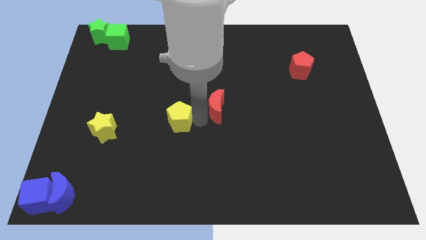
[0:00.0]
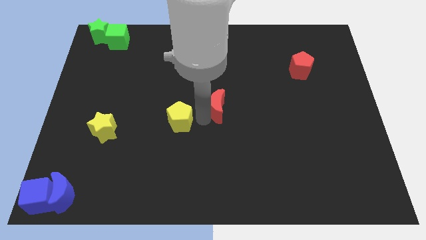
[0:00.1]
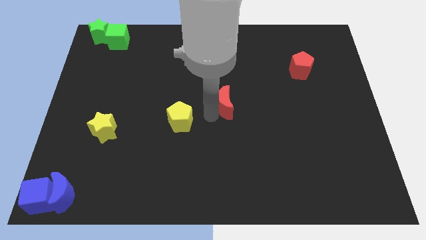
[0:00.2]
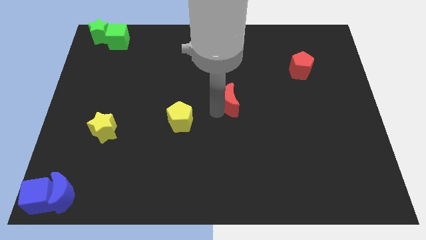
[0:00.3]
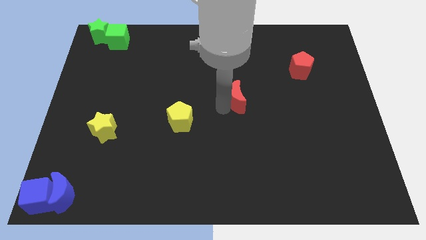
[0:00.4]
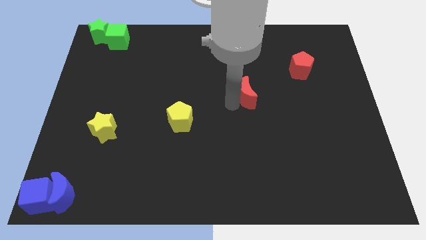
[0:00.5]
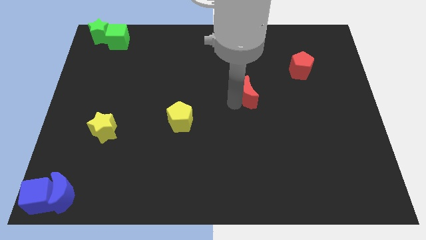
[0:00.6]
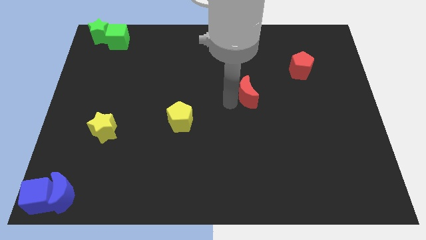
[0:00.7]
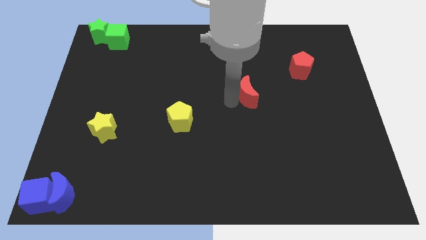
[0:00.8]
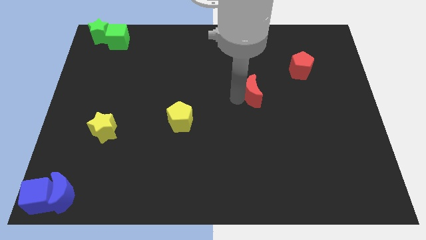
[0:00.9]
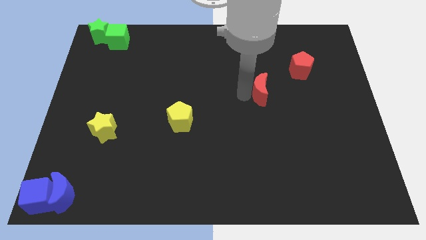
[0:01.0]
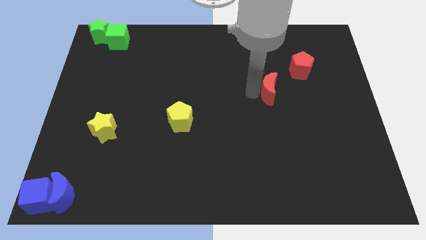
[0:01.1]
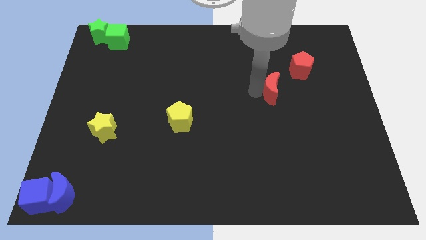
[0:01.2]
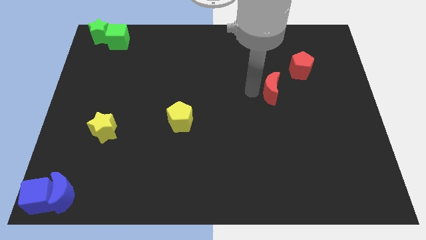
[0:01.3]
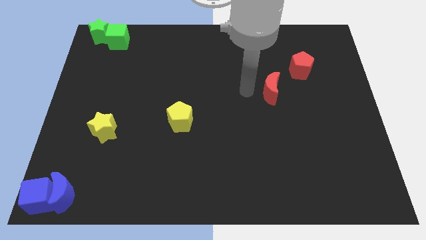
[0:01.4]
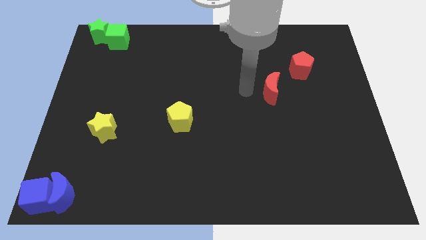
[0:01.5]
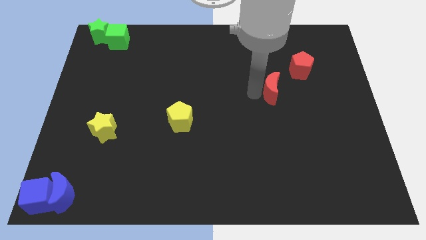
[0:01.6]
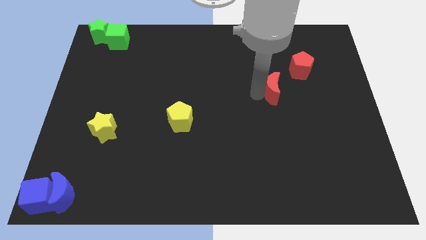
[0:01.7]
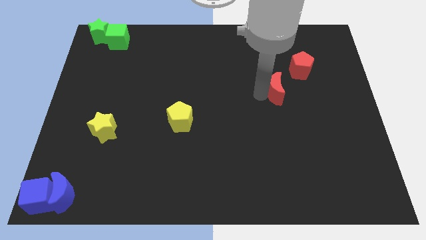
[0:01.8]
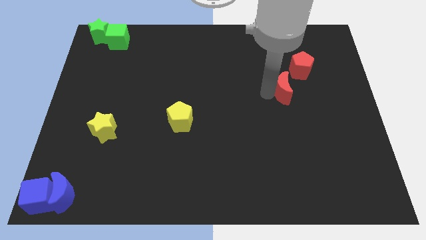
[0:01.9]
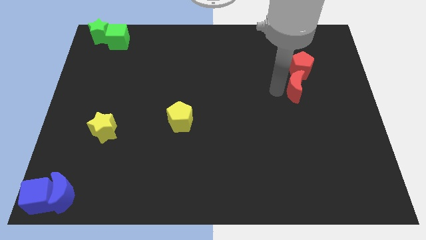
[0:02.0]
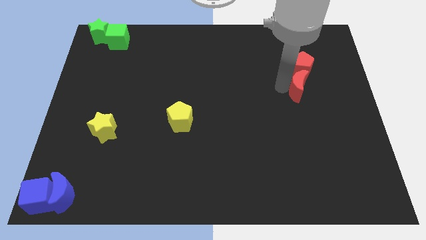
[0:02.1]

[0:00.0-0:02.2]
move the red crescent to the left side bottom of the red pentagon

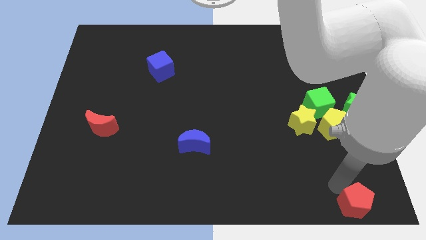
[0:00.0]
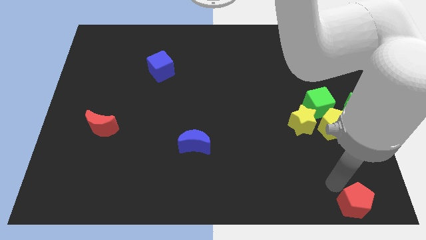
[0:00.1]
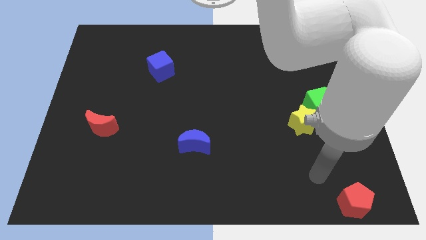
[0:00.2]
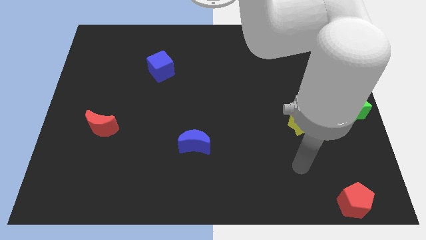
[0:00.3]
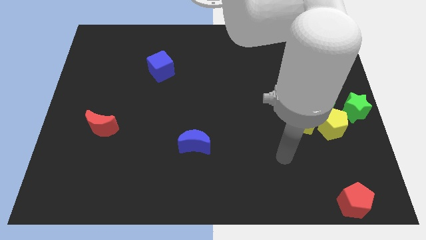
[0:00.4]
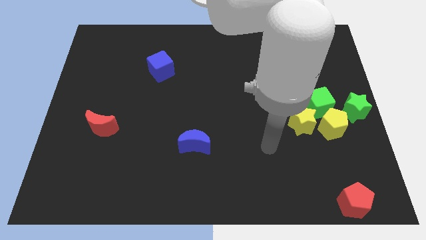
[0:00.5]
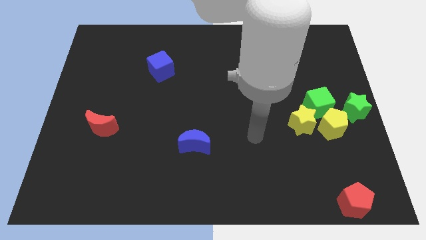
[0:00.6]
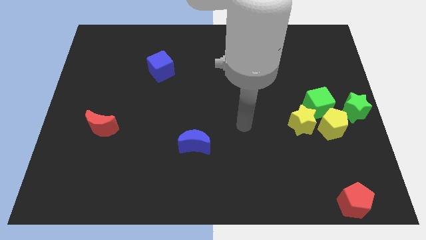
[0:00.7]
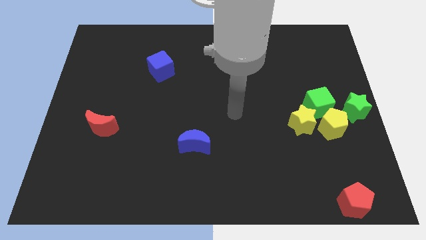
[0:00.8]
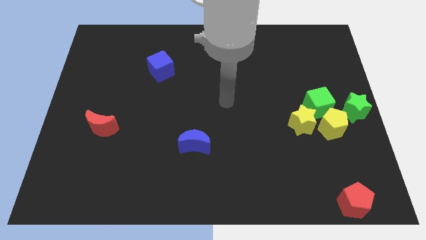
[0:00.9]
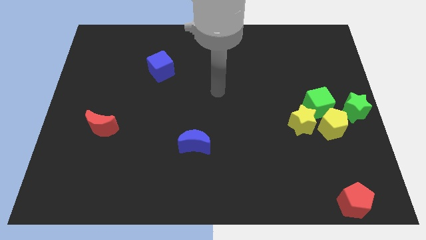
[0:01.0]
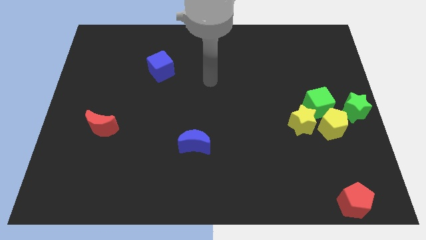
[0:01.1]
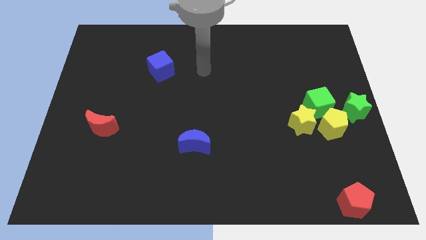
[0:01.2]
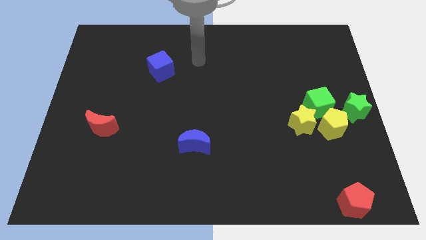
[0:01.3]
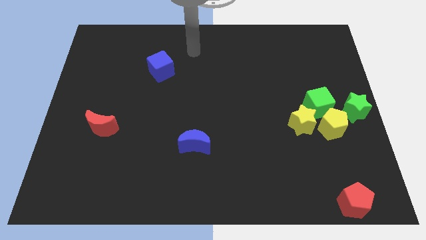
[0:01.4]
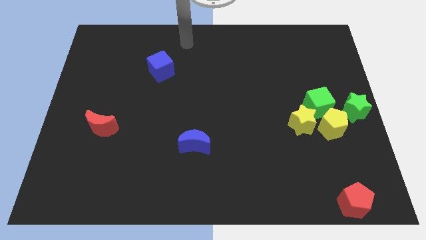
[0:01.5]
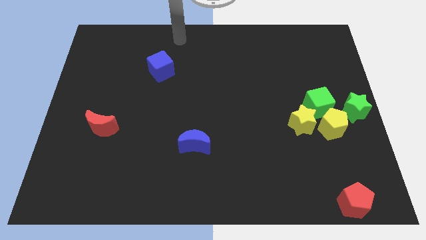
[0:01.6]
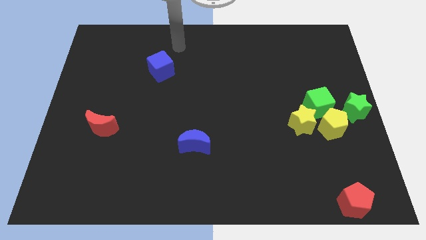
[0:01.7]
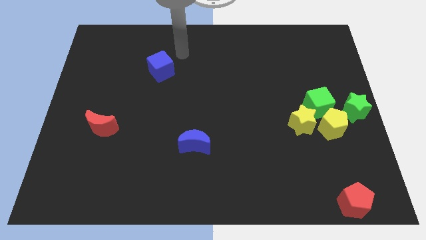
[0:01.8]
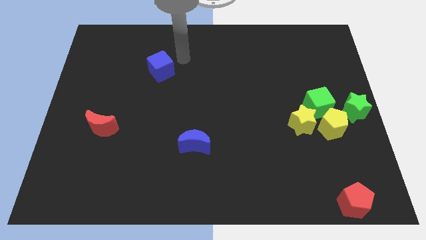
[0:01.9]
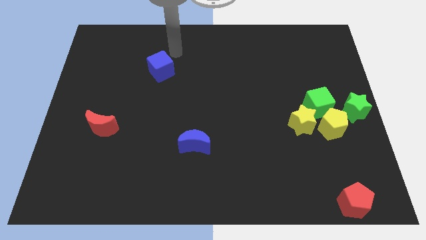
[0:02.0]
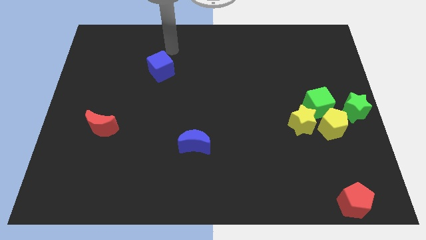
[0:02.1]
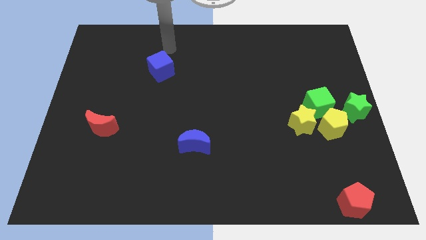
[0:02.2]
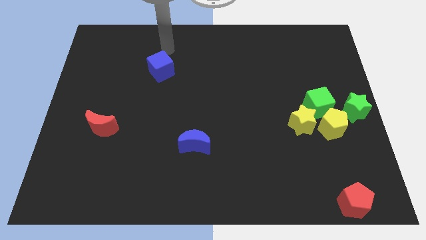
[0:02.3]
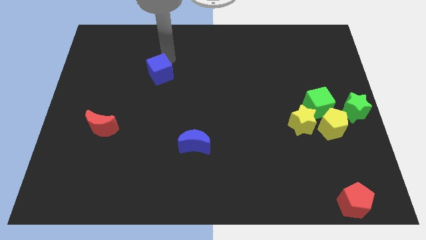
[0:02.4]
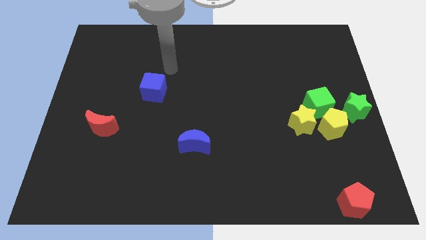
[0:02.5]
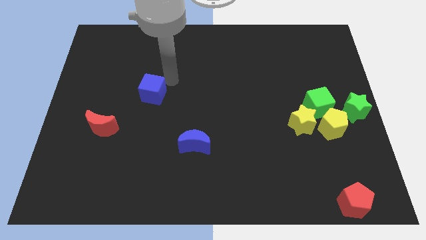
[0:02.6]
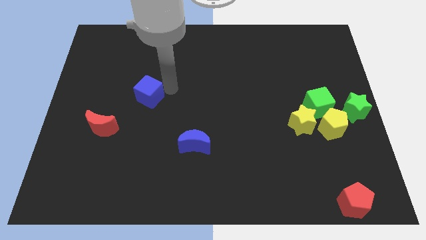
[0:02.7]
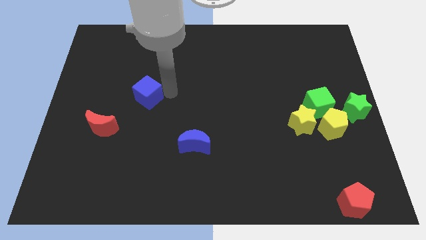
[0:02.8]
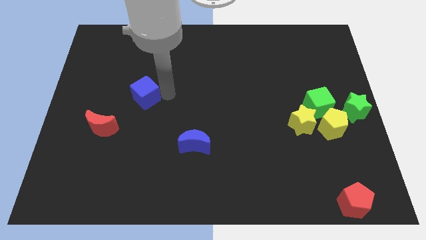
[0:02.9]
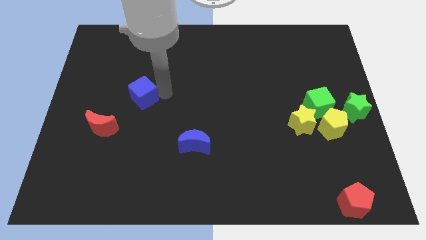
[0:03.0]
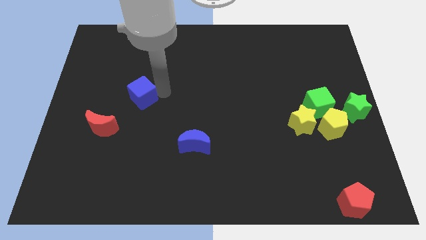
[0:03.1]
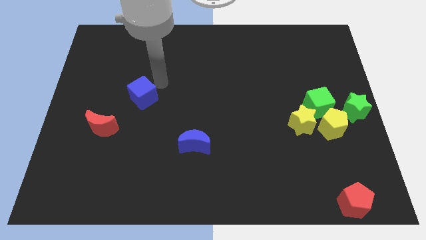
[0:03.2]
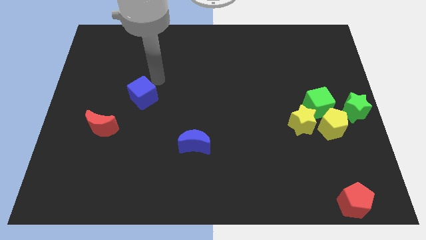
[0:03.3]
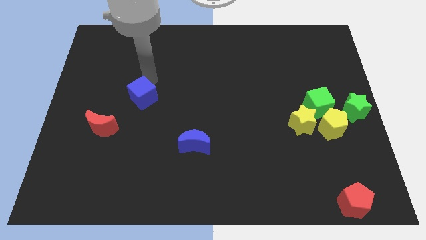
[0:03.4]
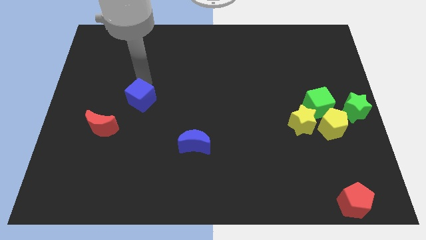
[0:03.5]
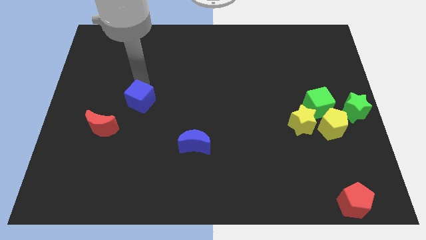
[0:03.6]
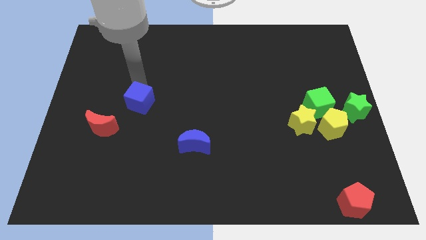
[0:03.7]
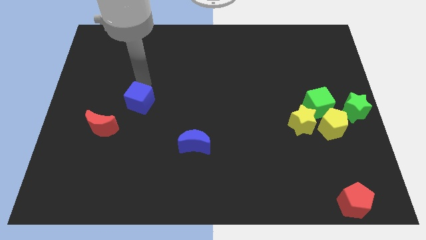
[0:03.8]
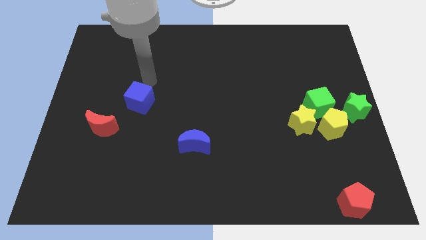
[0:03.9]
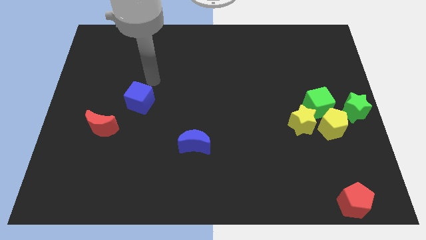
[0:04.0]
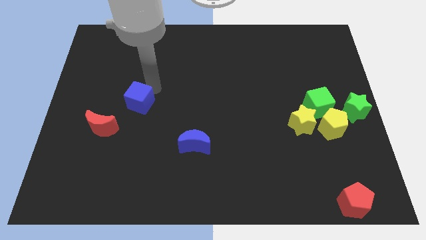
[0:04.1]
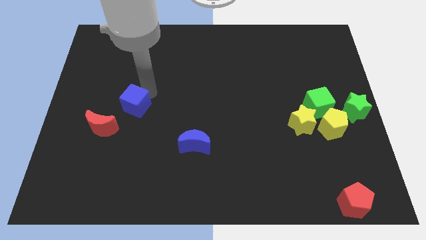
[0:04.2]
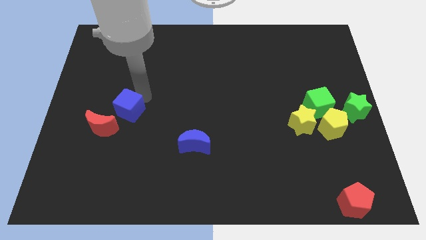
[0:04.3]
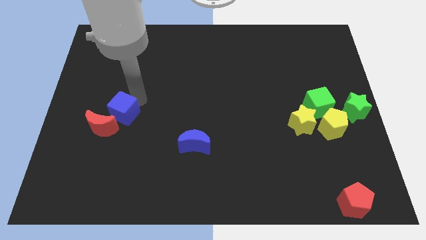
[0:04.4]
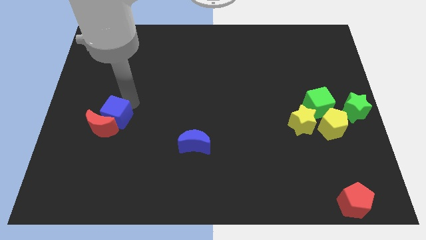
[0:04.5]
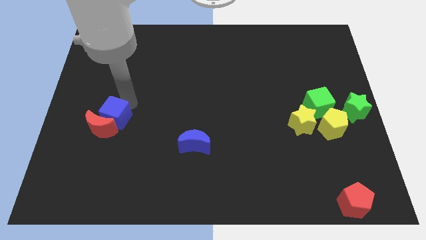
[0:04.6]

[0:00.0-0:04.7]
push the blue cube into the red moon

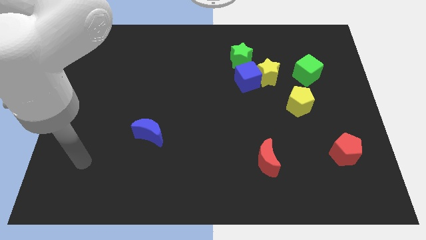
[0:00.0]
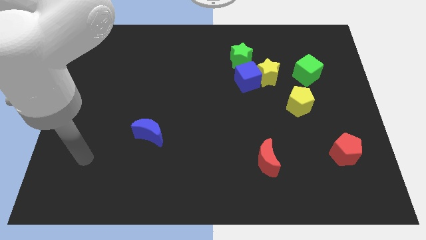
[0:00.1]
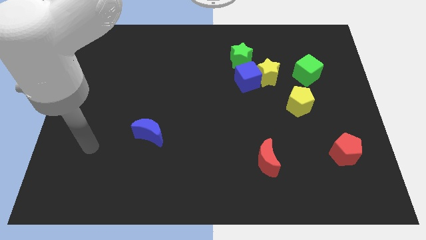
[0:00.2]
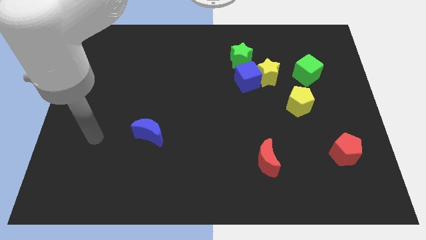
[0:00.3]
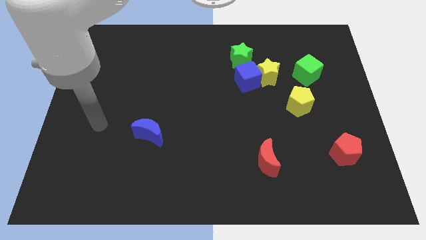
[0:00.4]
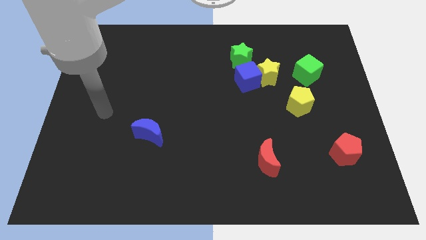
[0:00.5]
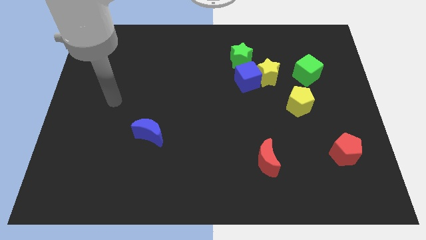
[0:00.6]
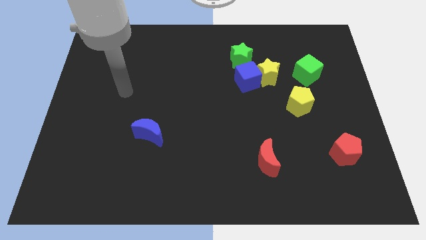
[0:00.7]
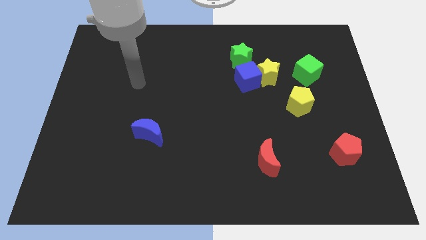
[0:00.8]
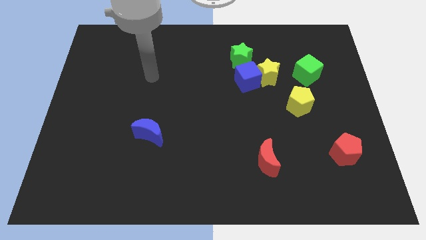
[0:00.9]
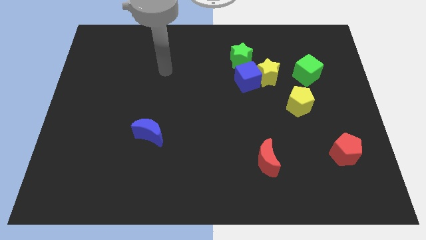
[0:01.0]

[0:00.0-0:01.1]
move your arm towards the top of the board

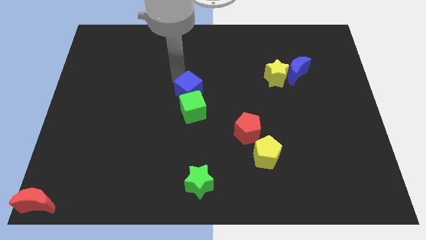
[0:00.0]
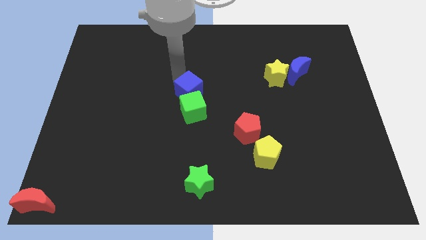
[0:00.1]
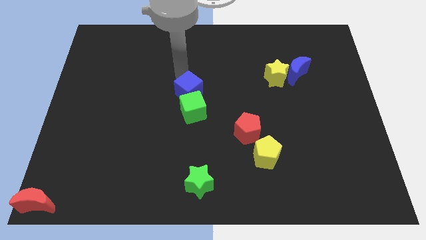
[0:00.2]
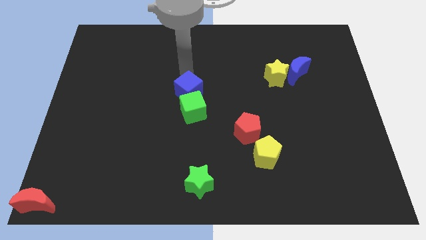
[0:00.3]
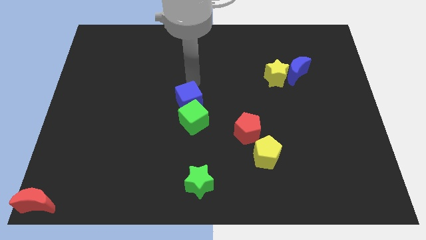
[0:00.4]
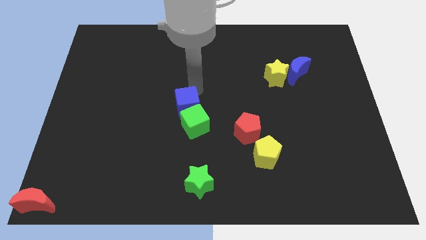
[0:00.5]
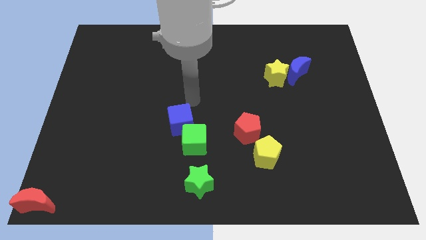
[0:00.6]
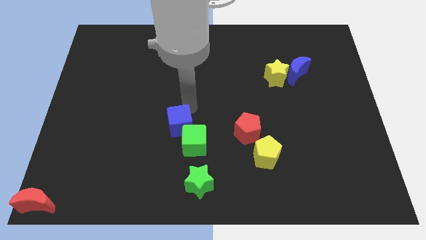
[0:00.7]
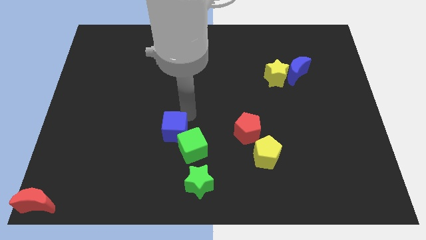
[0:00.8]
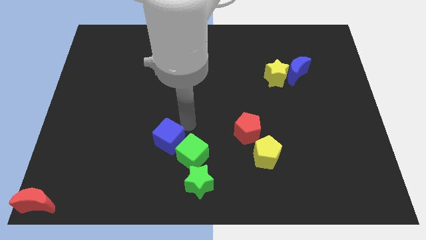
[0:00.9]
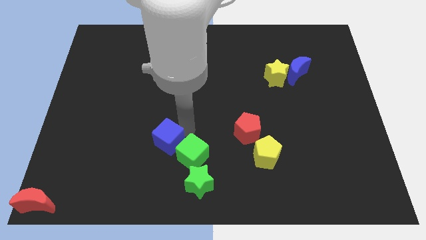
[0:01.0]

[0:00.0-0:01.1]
move the two cubes slightly down
